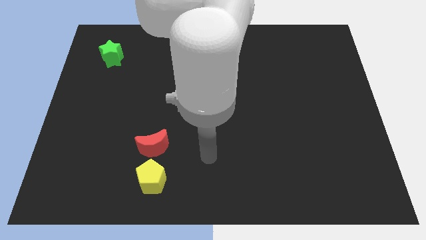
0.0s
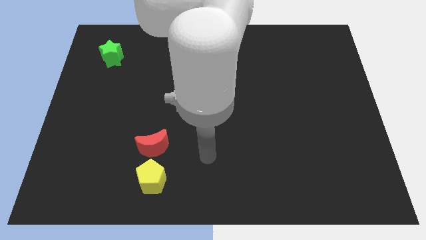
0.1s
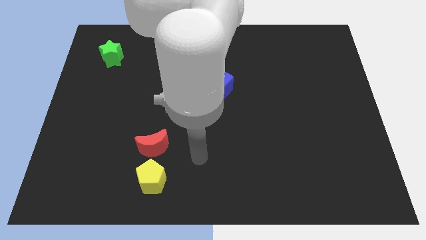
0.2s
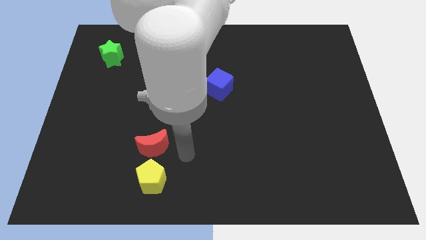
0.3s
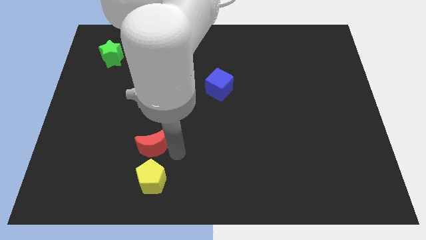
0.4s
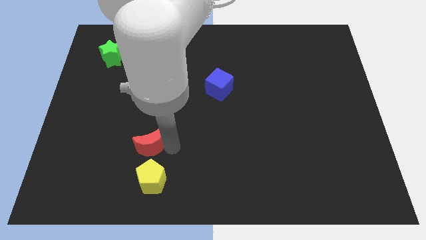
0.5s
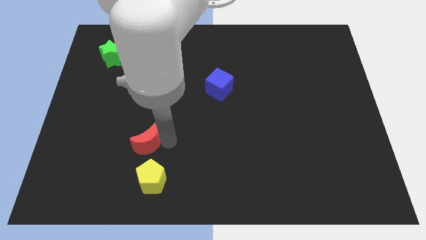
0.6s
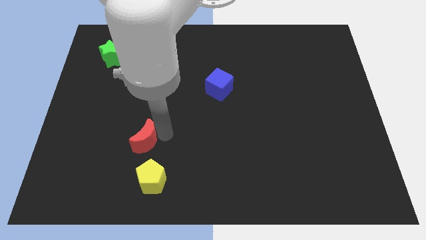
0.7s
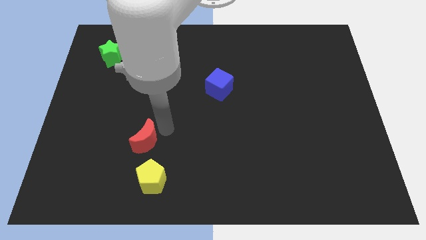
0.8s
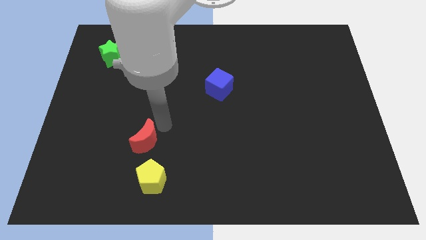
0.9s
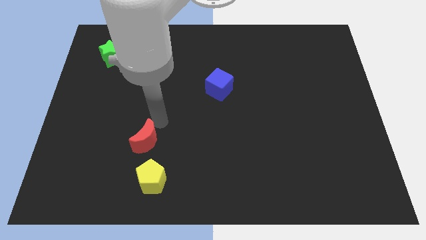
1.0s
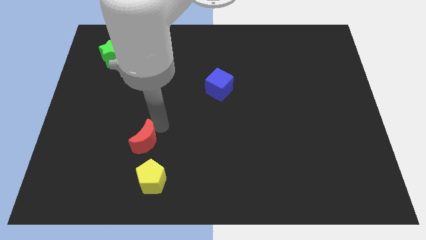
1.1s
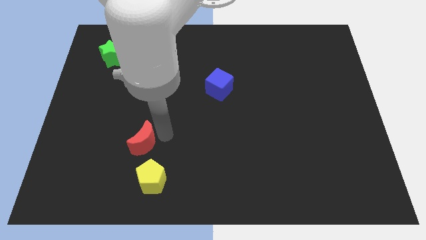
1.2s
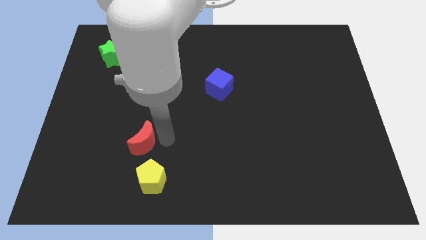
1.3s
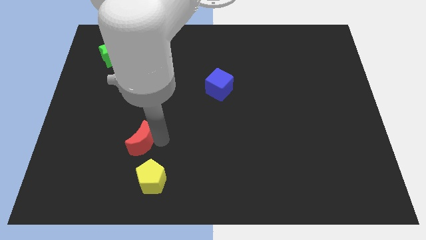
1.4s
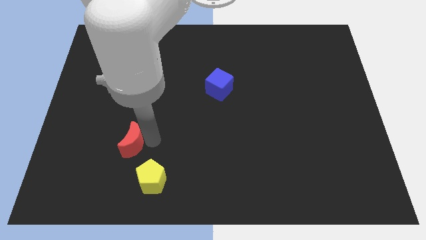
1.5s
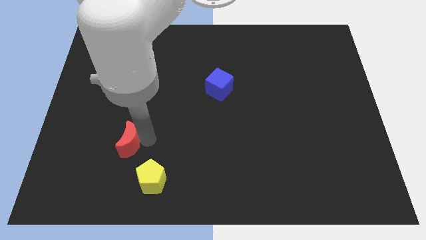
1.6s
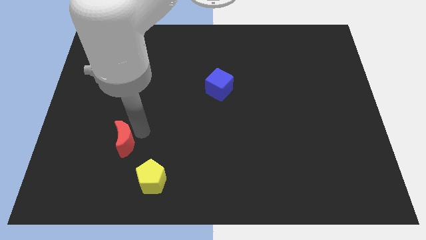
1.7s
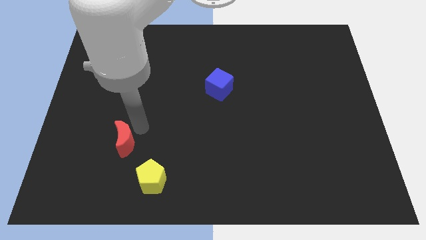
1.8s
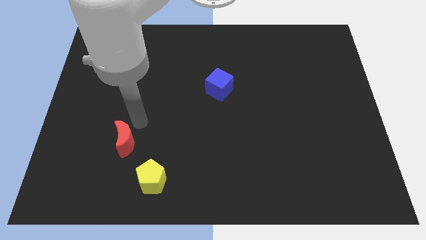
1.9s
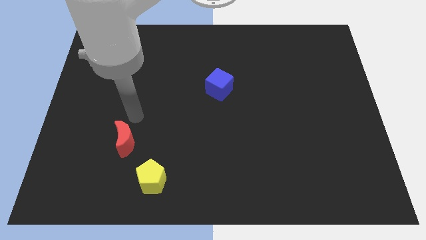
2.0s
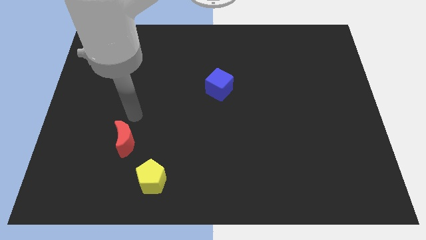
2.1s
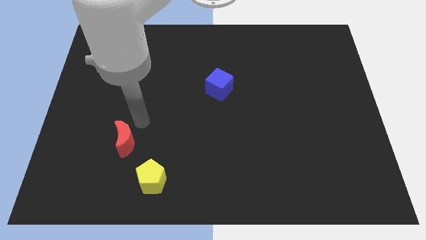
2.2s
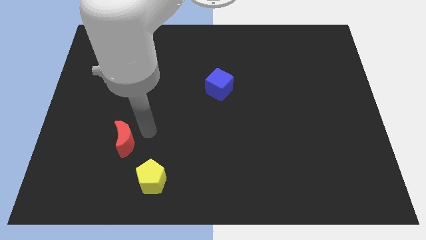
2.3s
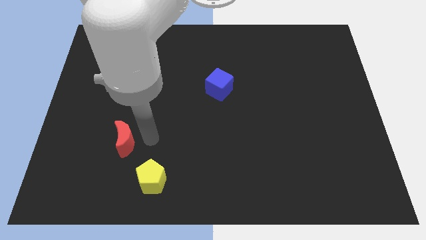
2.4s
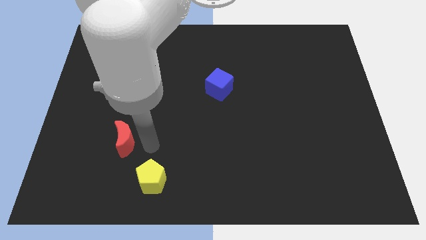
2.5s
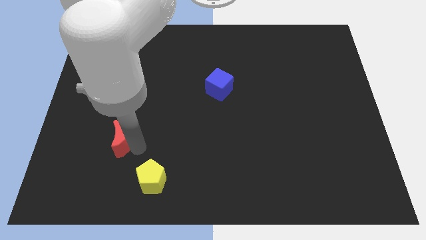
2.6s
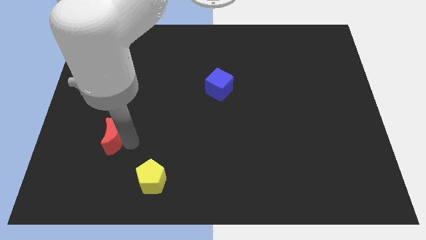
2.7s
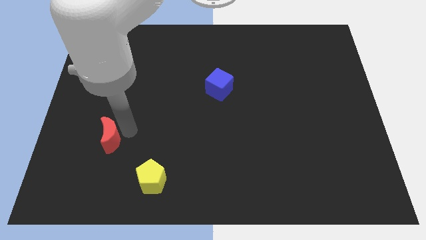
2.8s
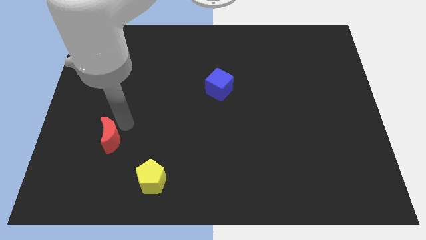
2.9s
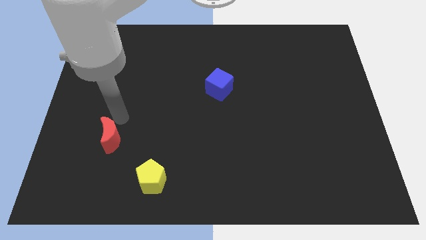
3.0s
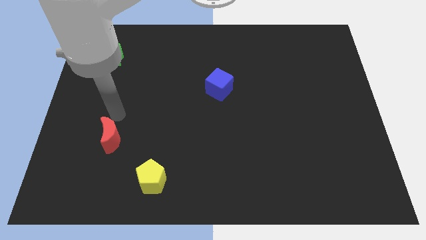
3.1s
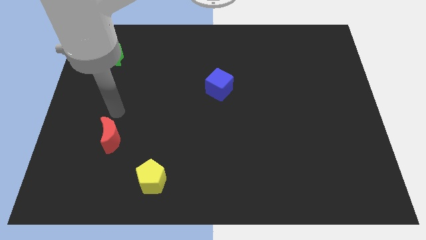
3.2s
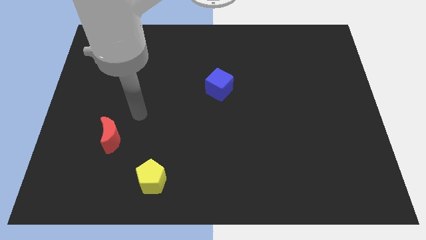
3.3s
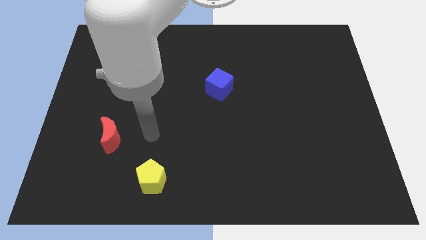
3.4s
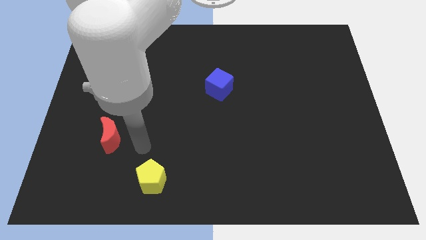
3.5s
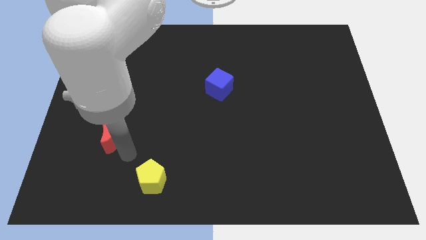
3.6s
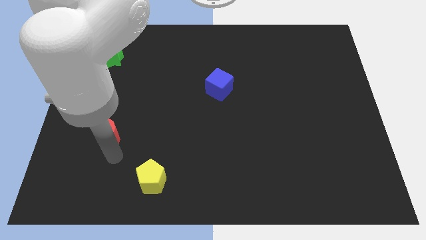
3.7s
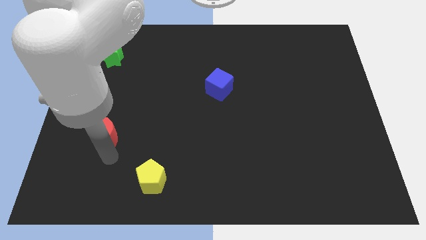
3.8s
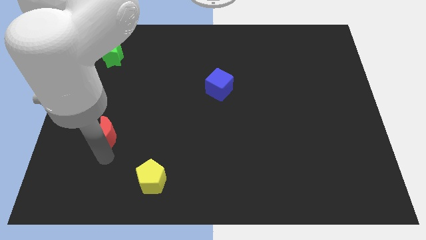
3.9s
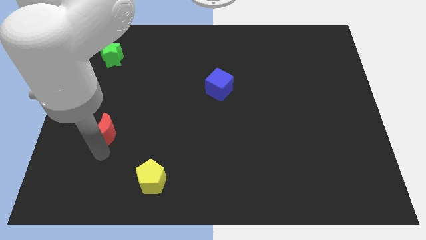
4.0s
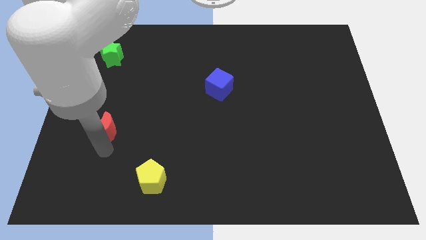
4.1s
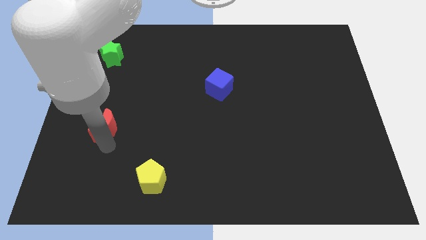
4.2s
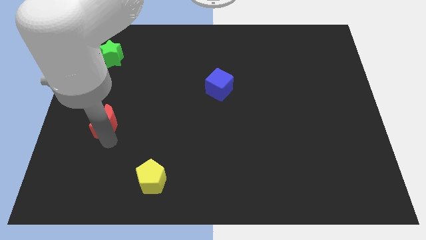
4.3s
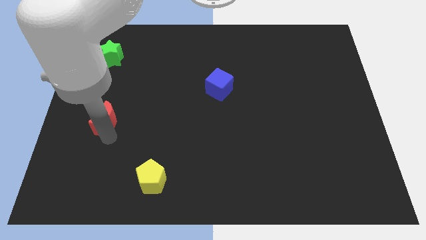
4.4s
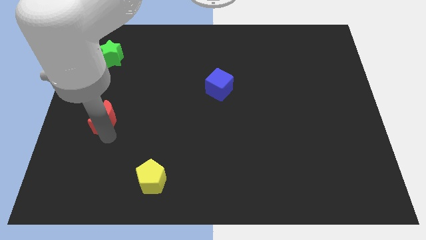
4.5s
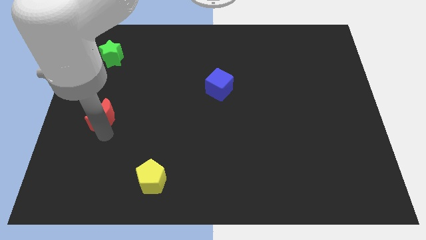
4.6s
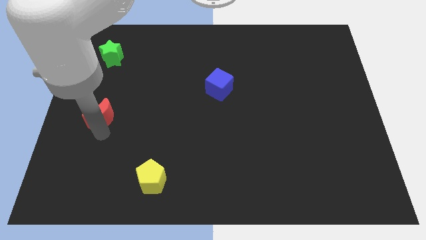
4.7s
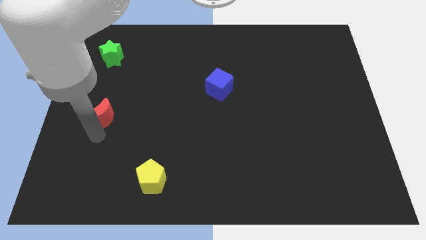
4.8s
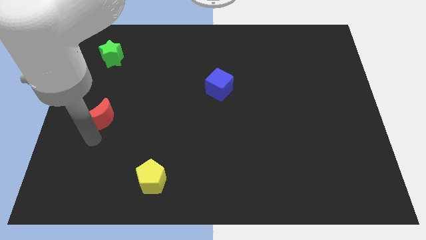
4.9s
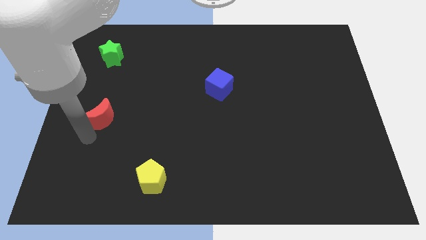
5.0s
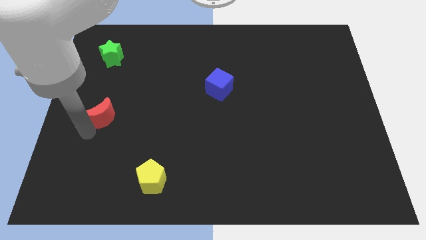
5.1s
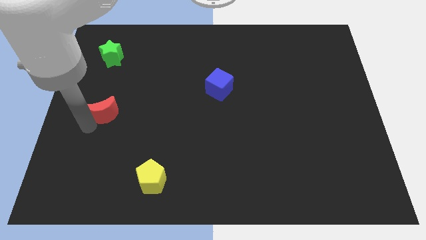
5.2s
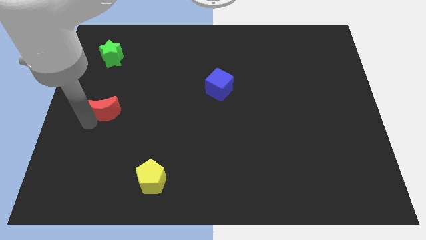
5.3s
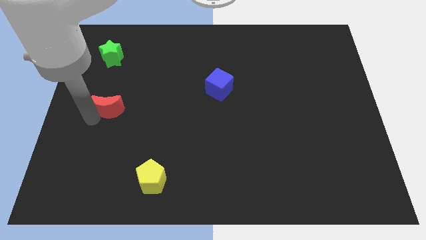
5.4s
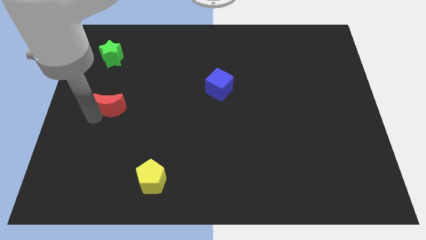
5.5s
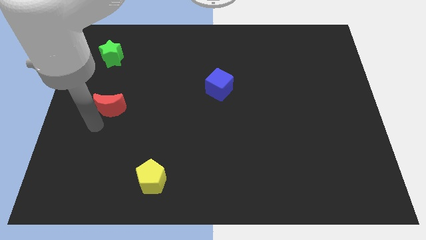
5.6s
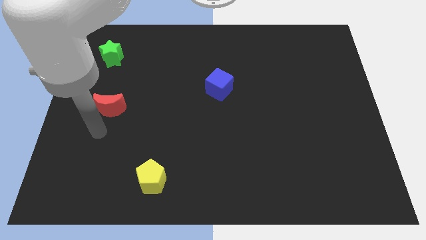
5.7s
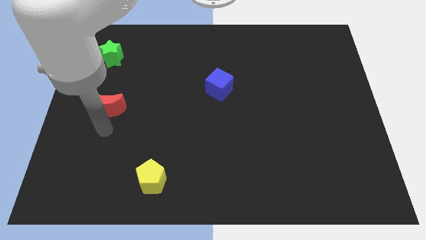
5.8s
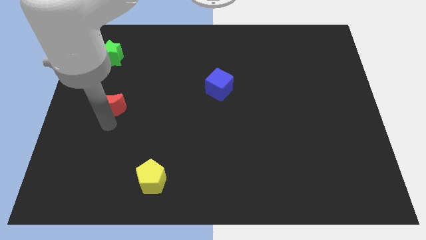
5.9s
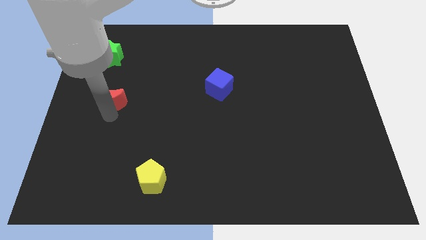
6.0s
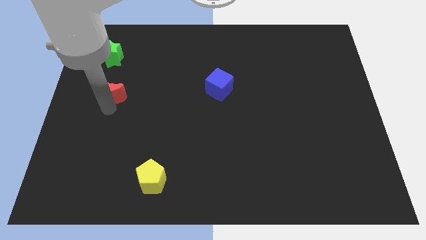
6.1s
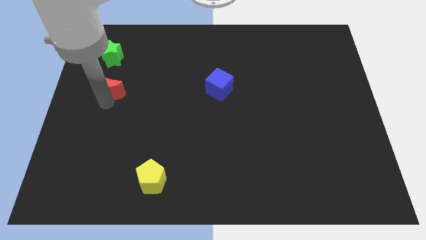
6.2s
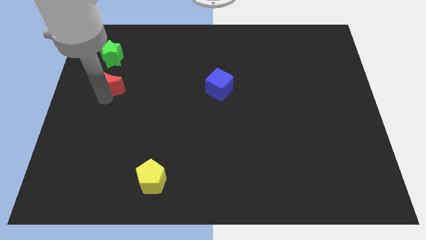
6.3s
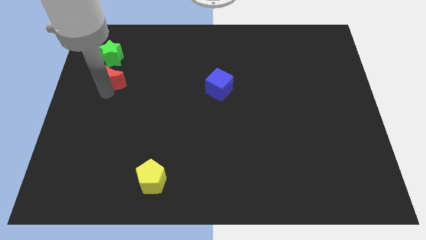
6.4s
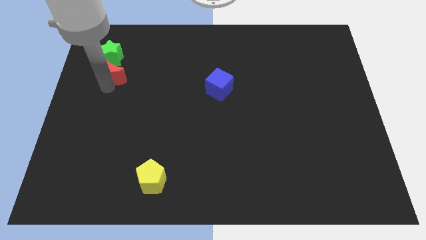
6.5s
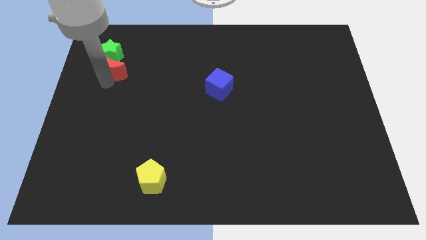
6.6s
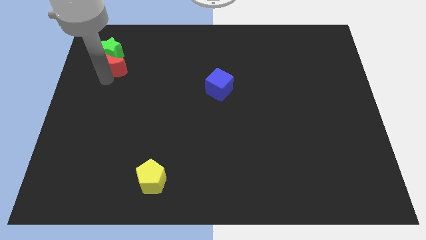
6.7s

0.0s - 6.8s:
put the red block close to the star

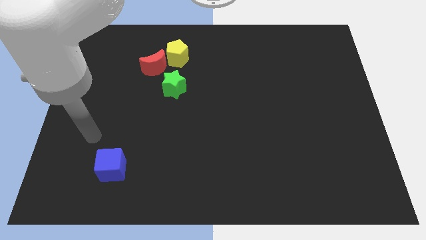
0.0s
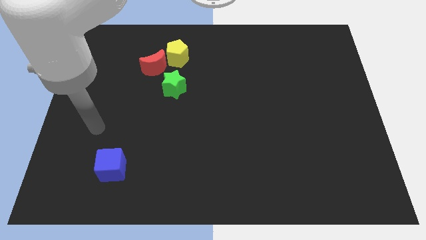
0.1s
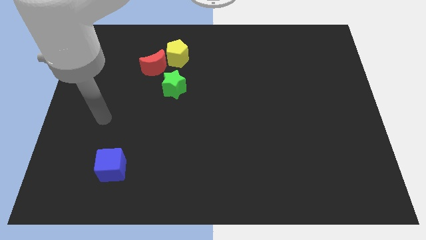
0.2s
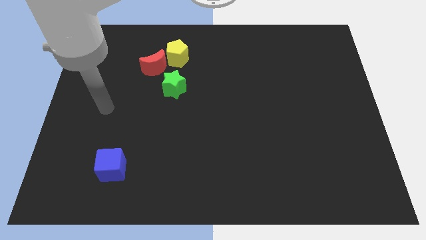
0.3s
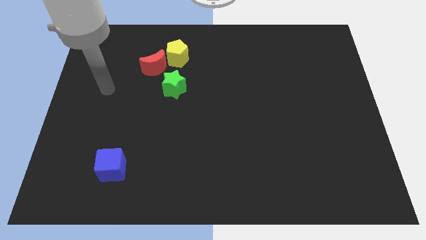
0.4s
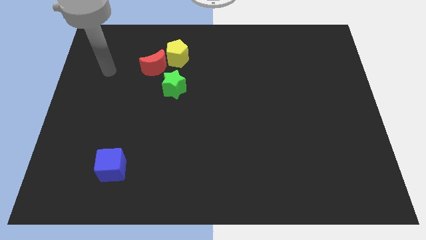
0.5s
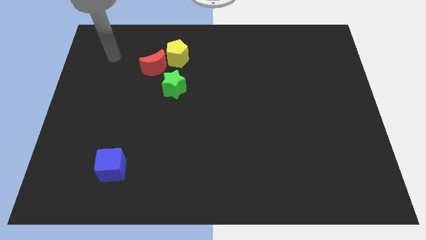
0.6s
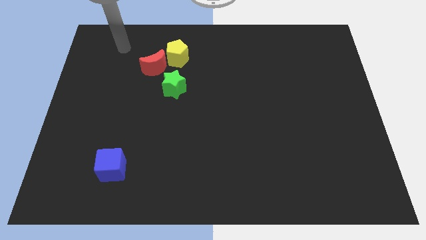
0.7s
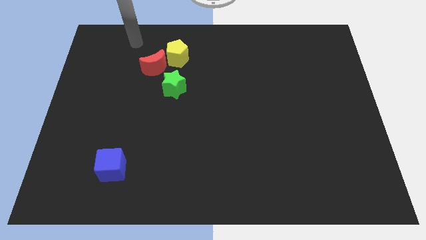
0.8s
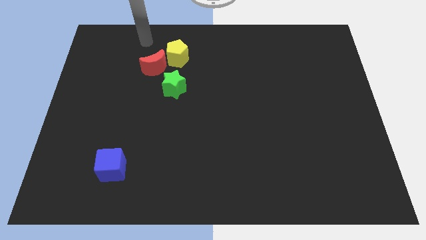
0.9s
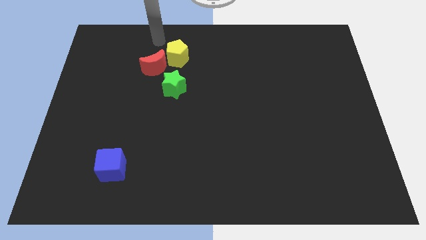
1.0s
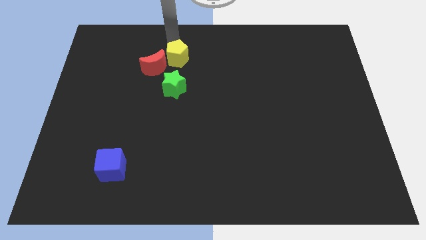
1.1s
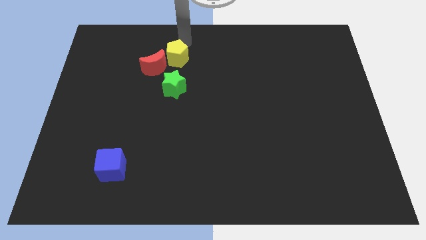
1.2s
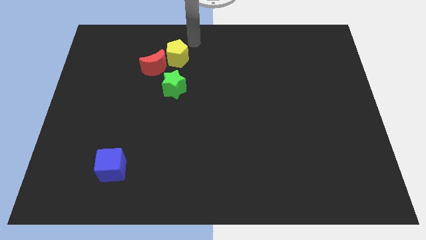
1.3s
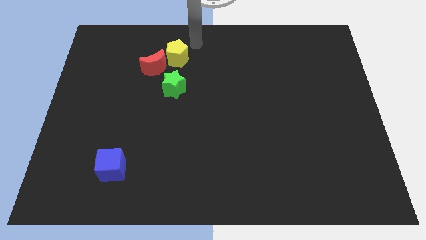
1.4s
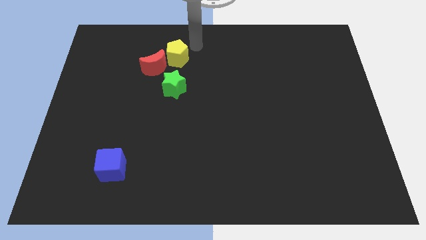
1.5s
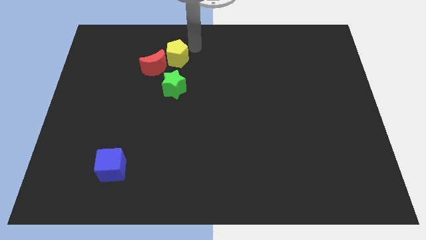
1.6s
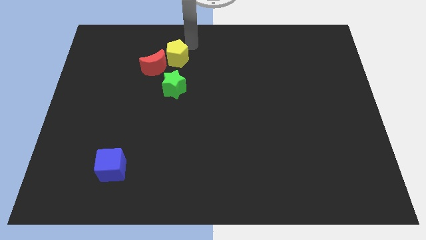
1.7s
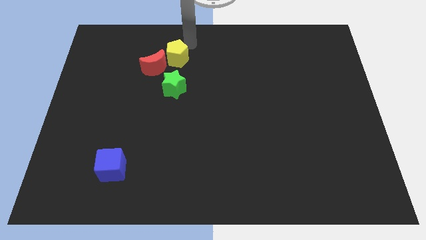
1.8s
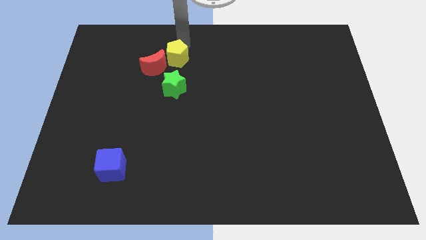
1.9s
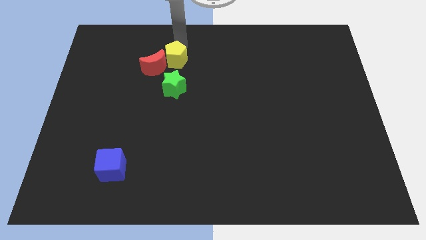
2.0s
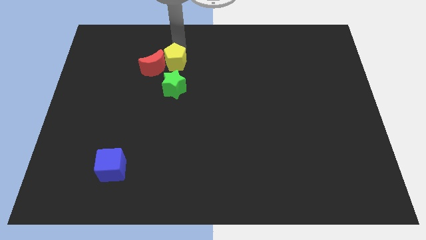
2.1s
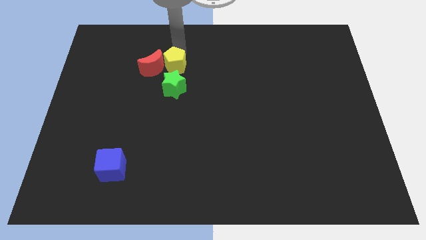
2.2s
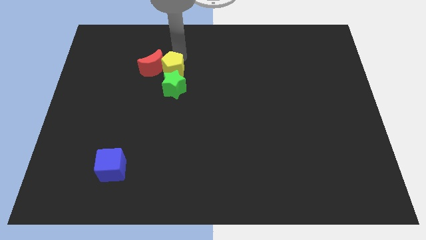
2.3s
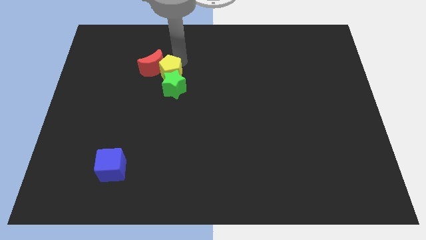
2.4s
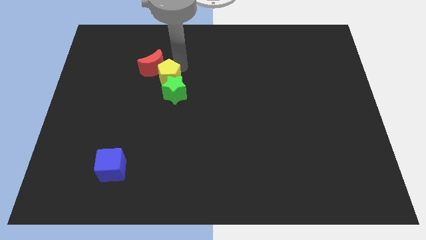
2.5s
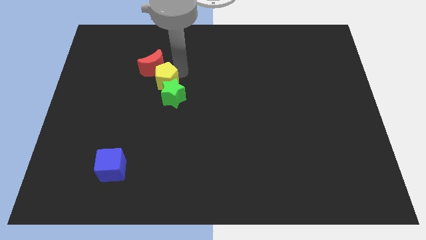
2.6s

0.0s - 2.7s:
slide the pentagon next to the star
